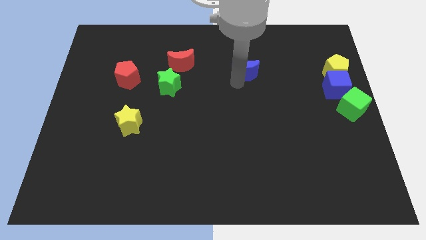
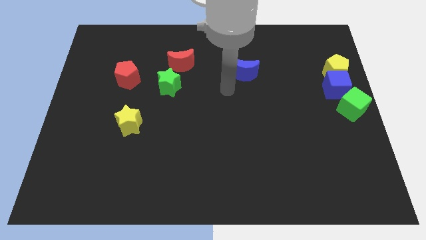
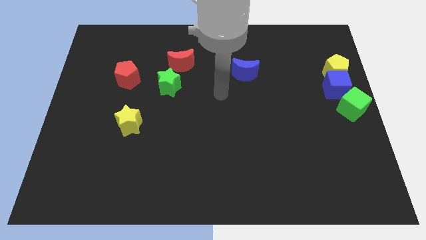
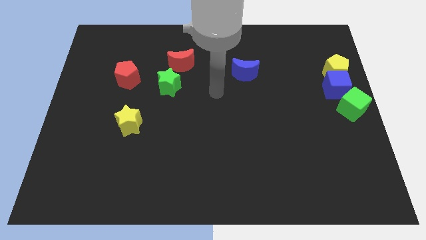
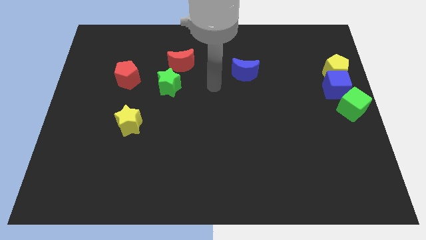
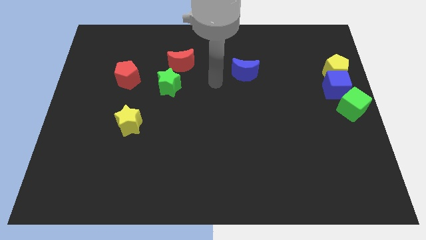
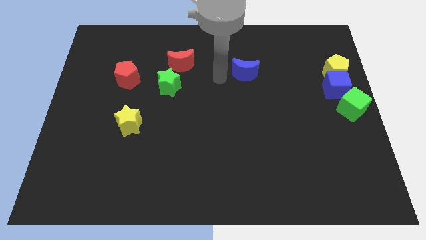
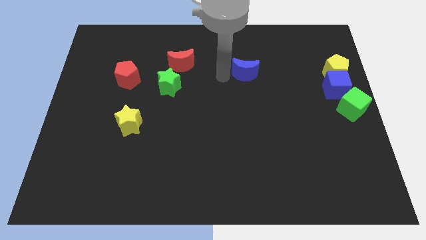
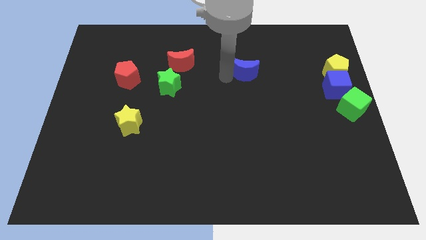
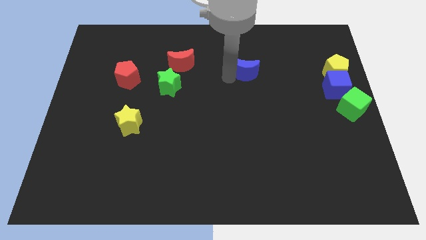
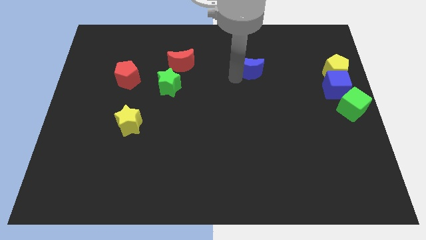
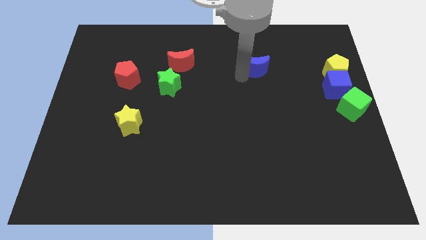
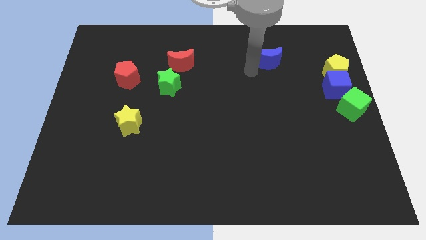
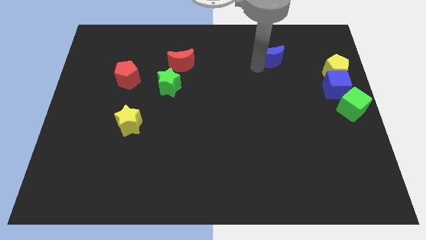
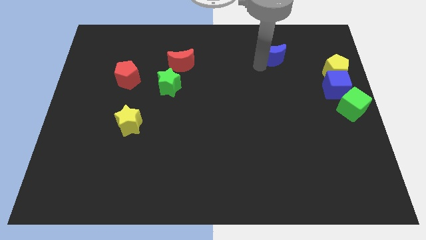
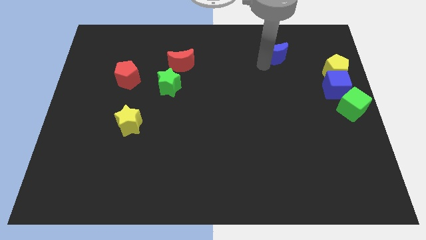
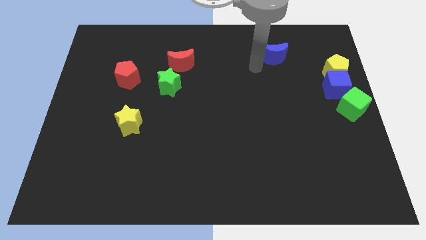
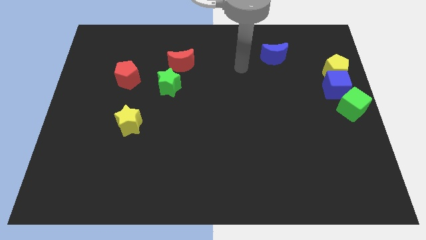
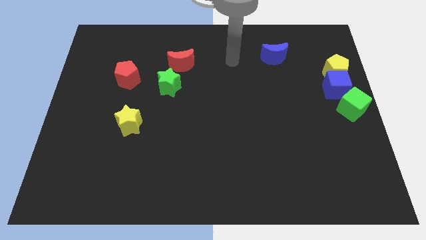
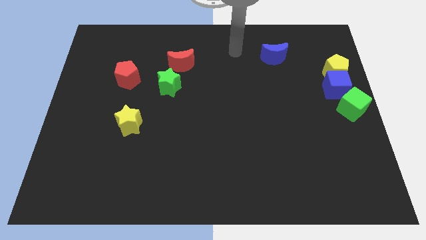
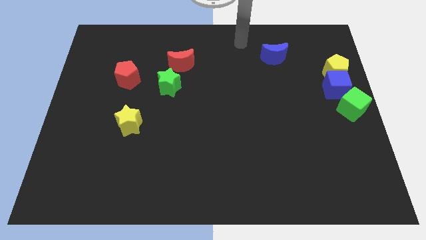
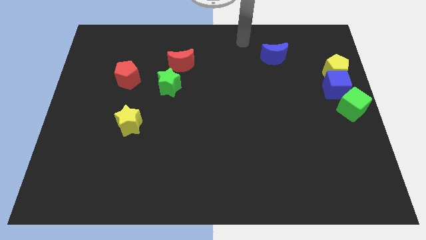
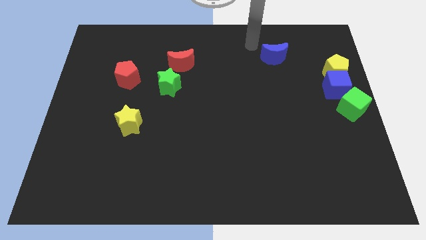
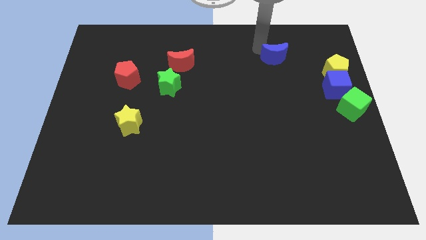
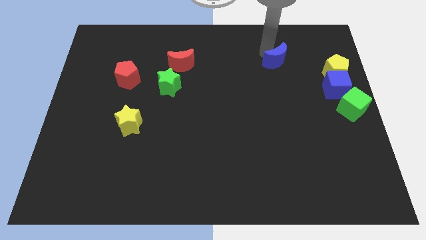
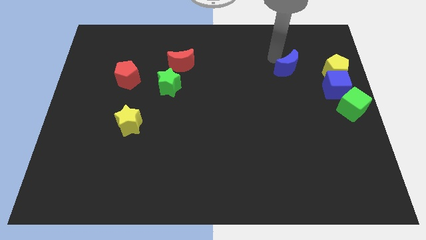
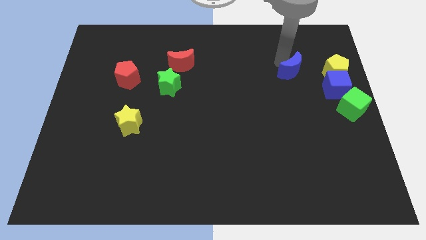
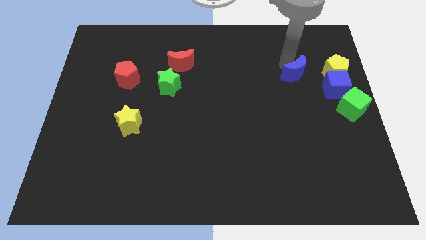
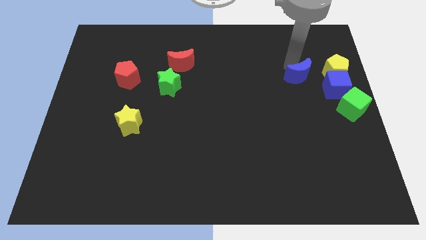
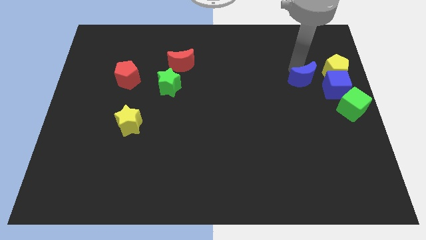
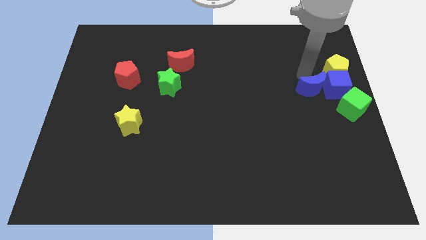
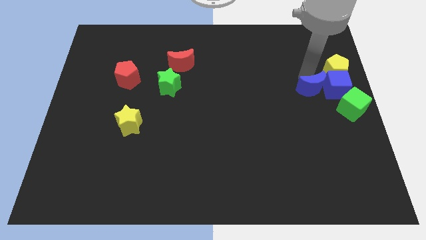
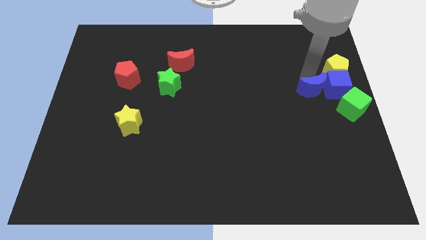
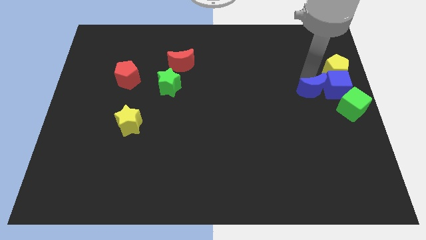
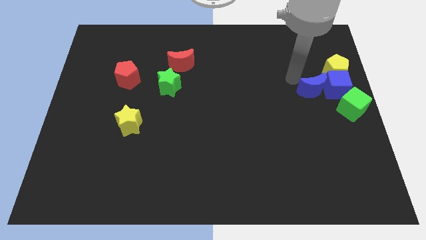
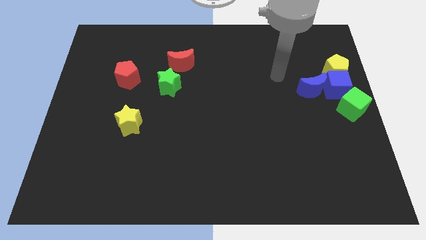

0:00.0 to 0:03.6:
place blue crescent to the left of blue cube

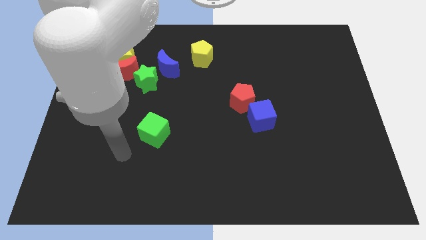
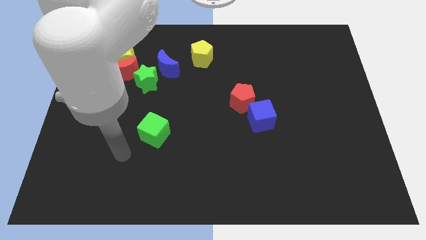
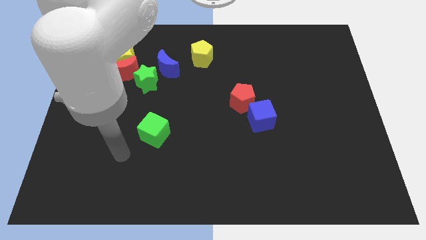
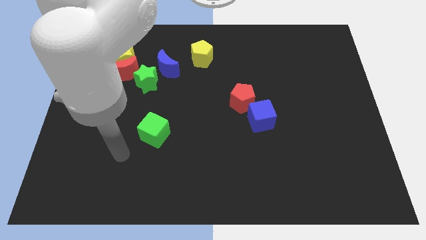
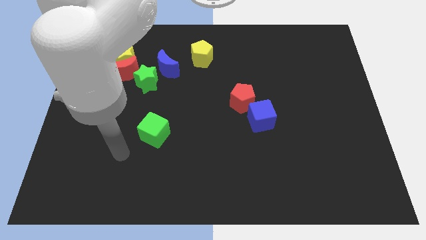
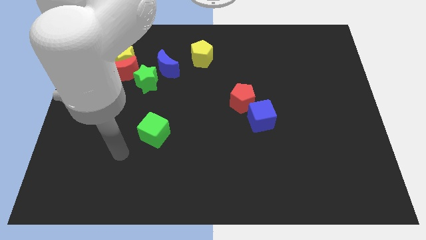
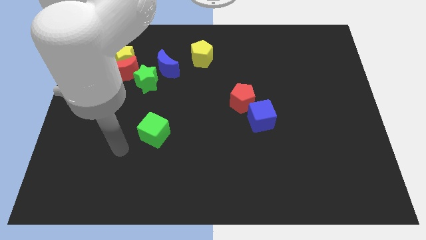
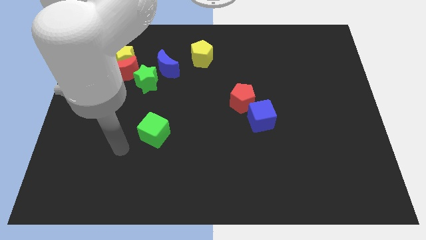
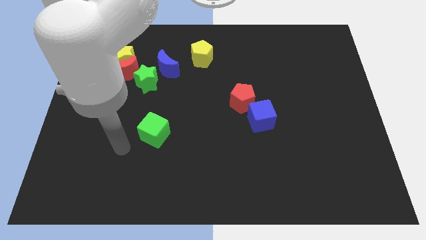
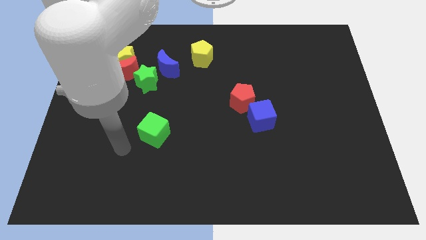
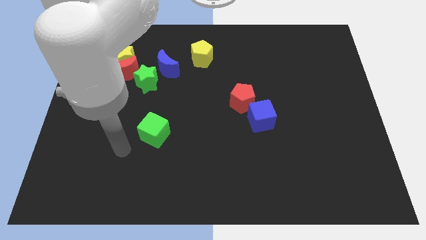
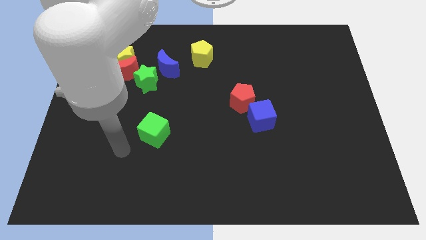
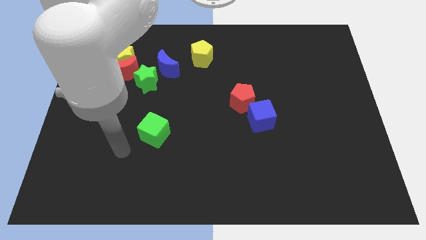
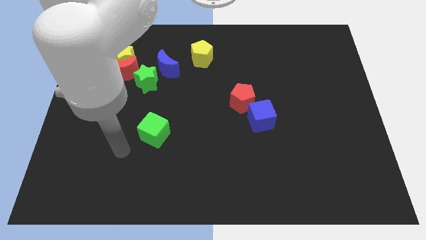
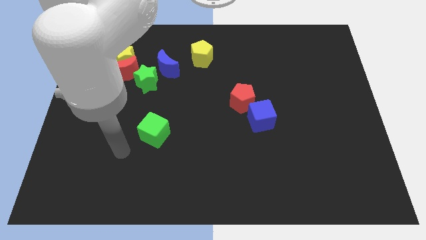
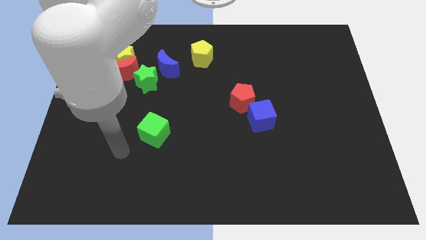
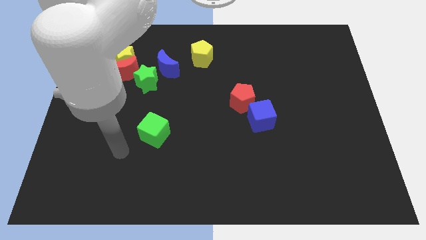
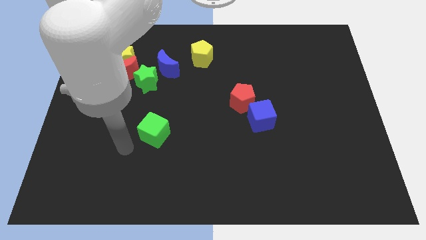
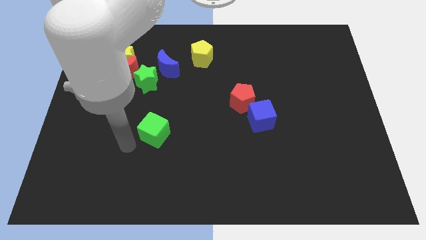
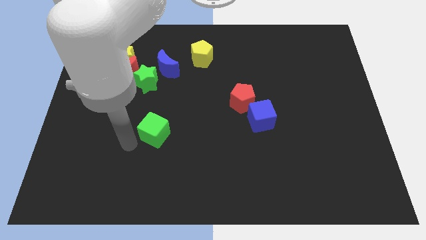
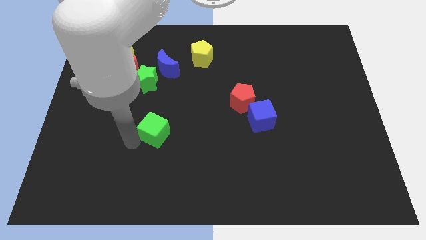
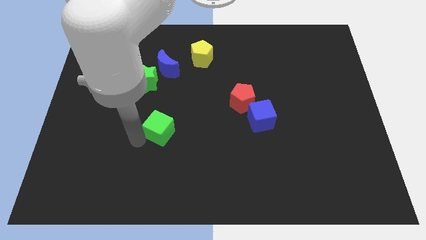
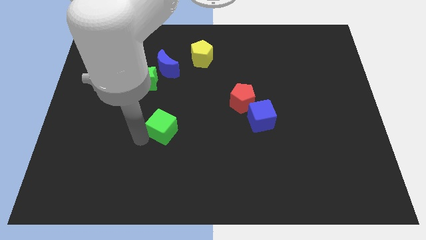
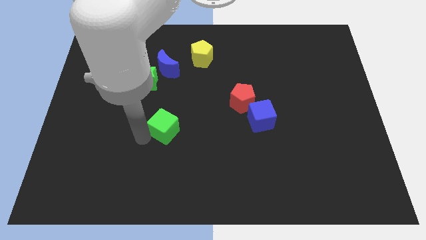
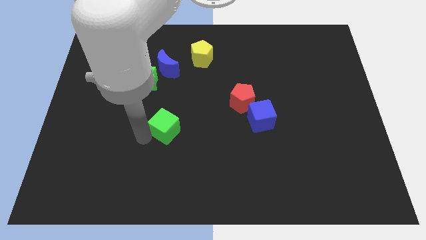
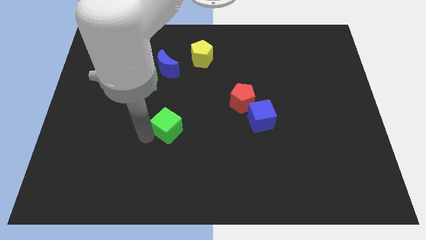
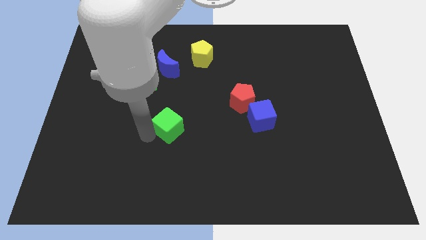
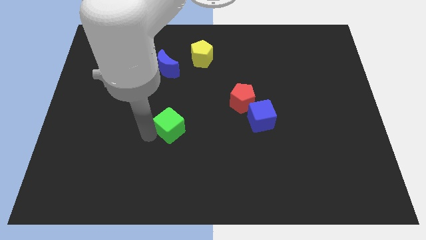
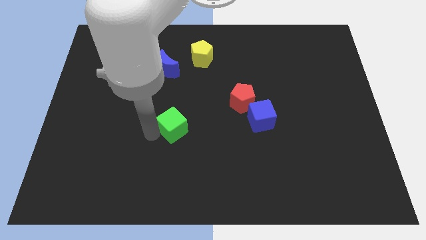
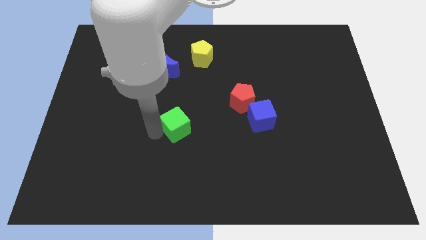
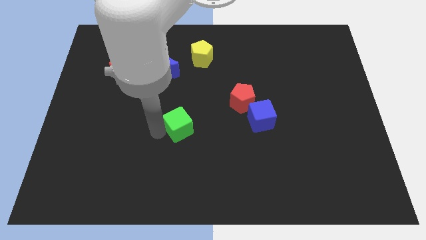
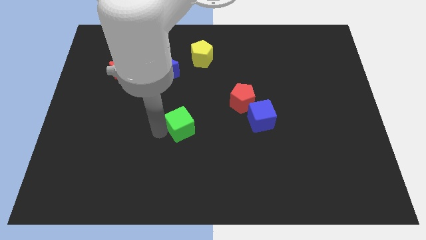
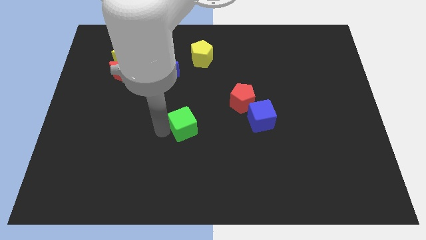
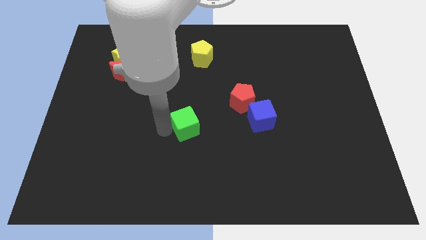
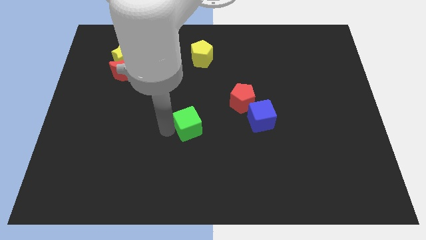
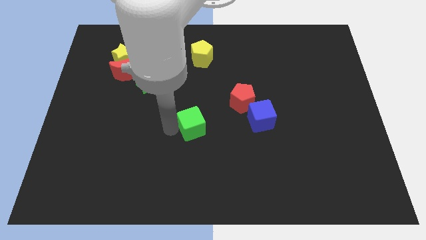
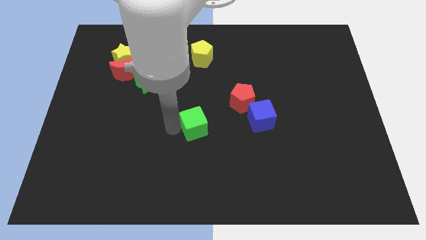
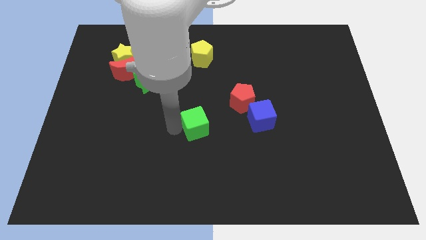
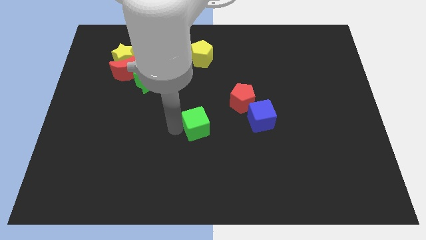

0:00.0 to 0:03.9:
push the green cube to the center of the board

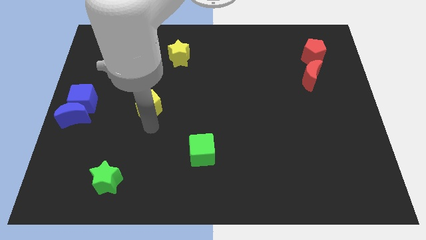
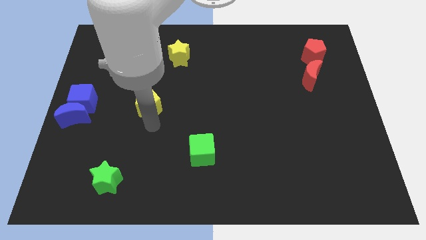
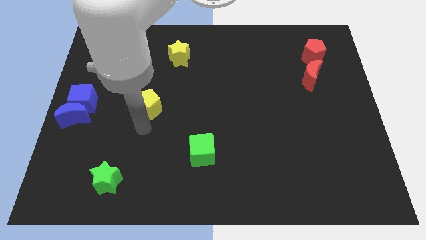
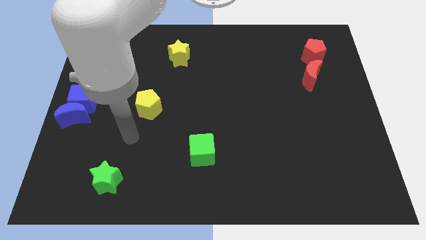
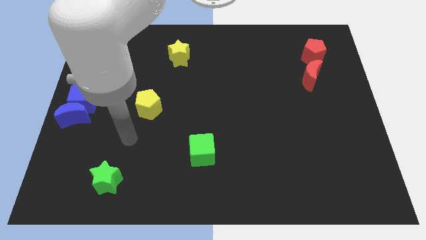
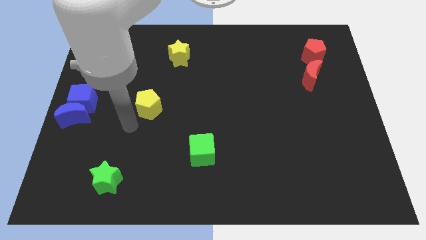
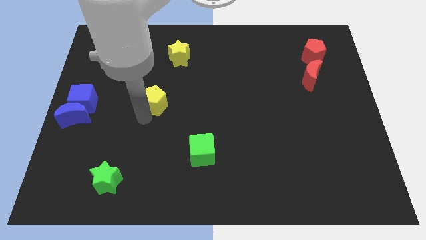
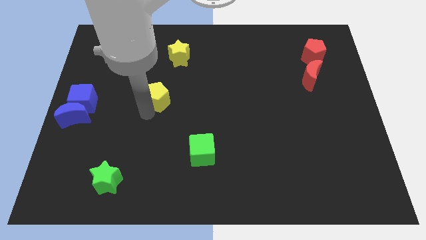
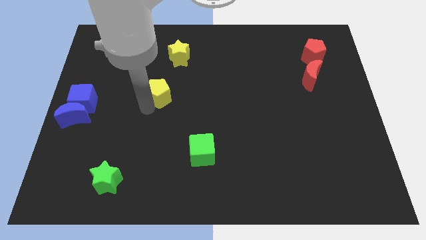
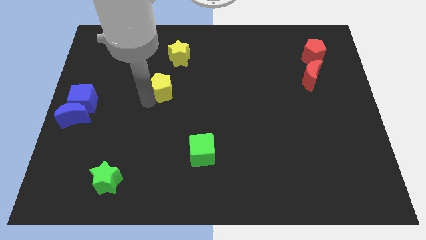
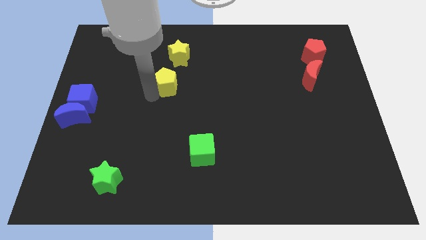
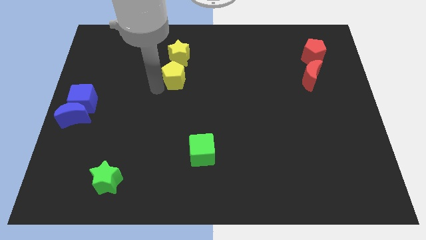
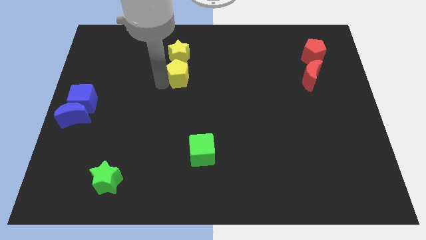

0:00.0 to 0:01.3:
put yellow pentagon below yellow star

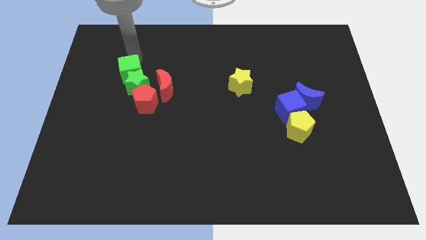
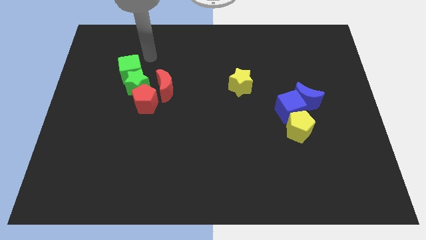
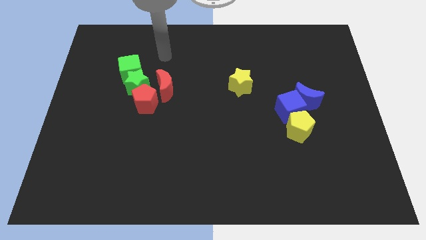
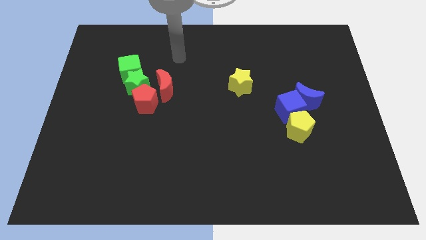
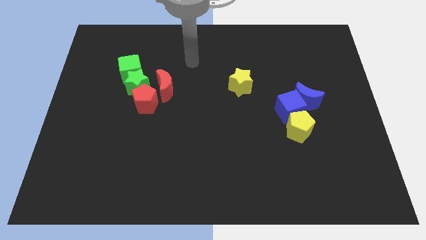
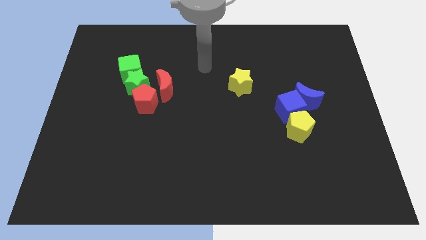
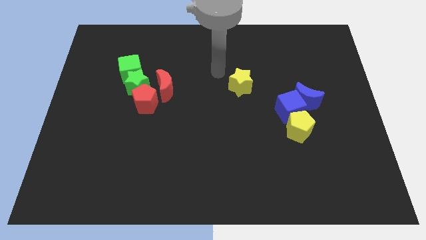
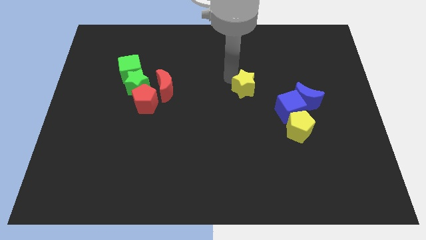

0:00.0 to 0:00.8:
move the arm away from the green cube
